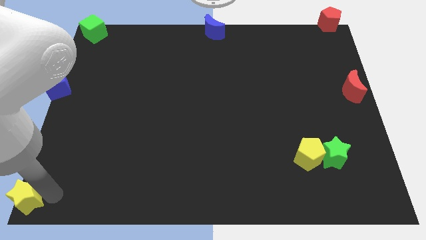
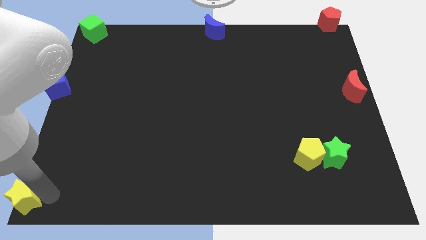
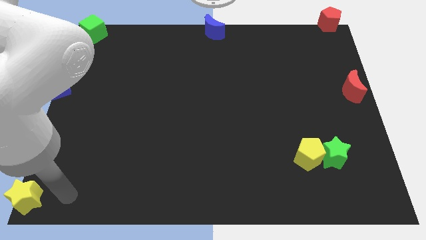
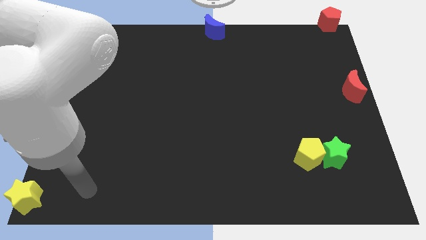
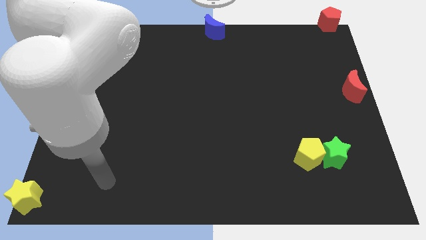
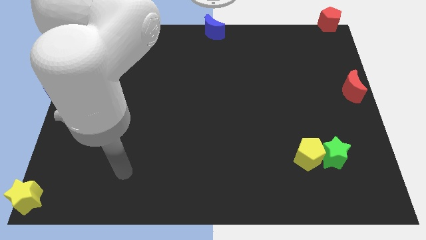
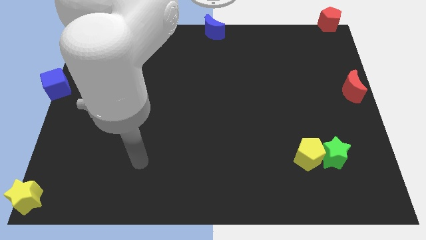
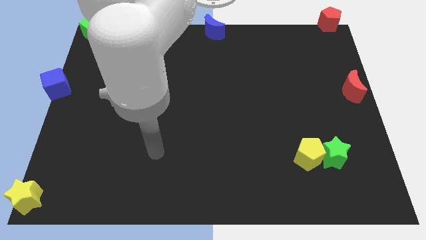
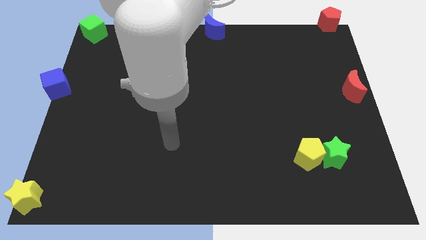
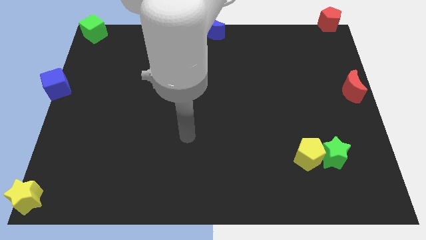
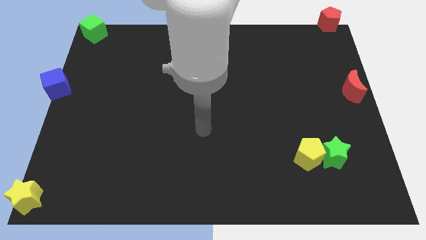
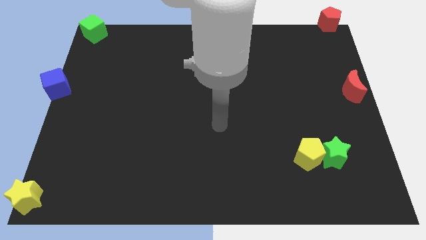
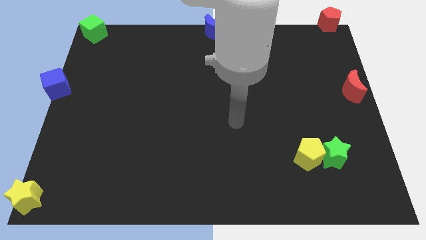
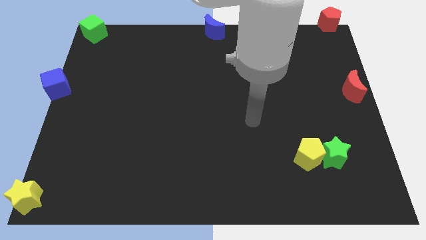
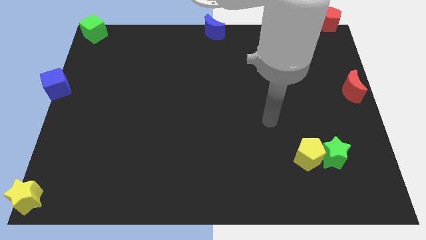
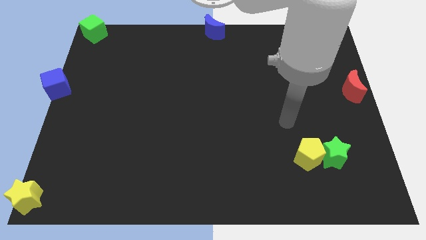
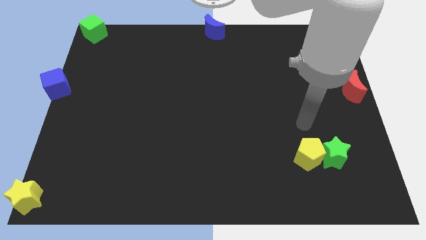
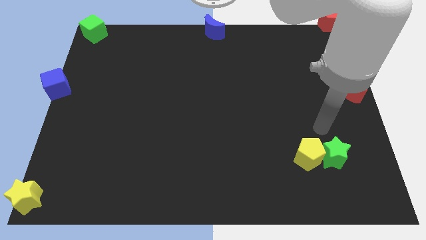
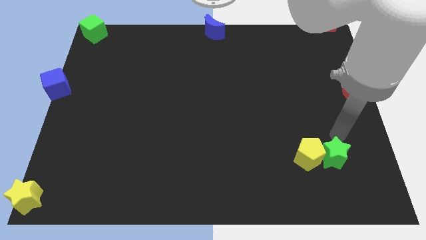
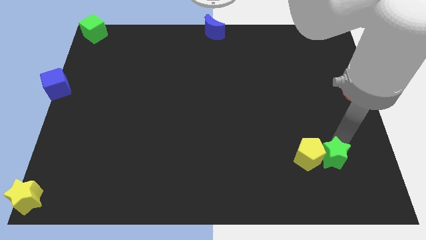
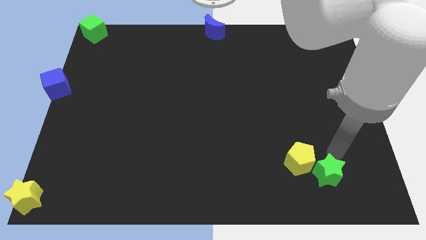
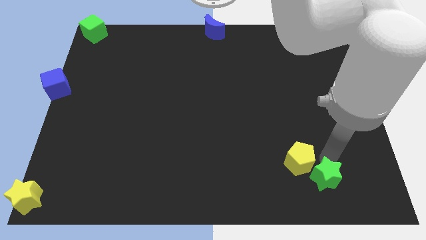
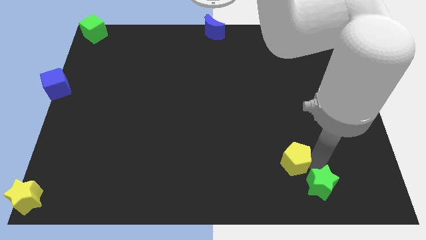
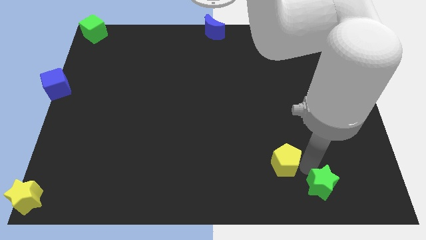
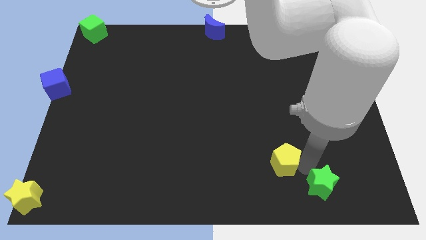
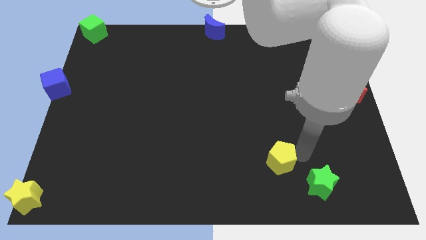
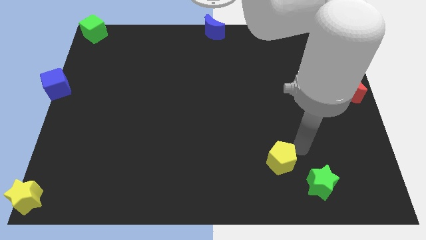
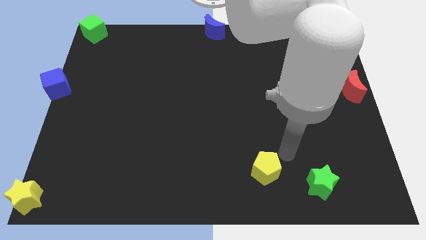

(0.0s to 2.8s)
separate the yellow pentagon and green star from each other

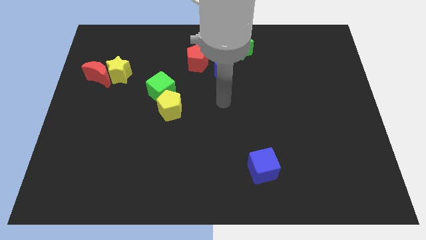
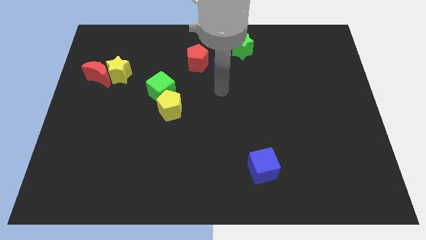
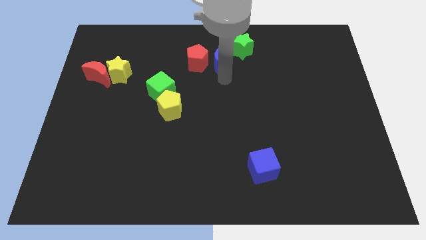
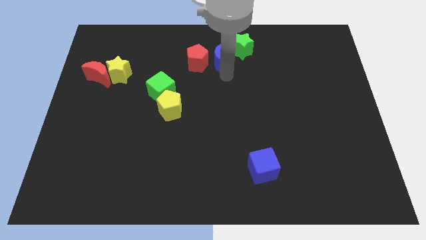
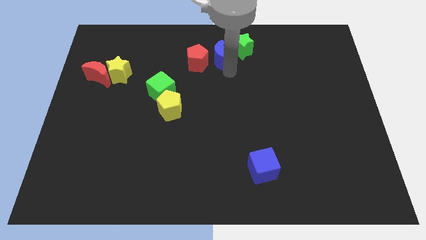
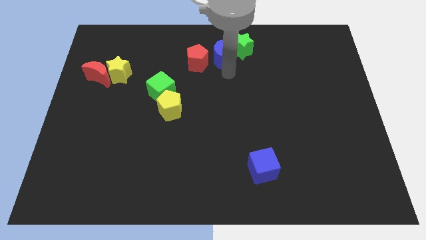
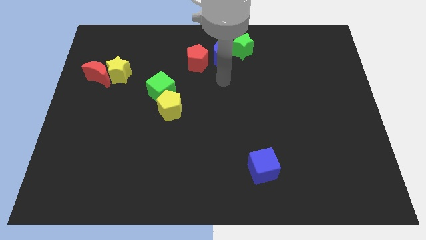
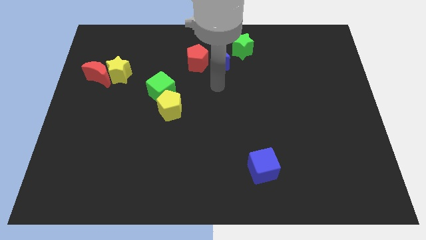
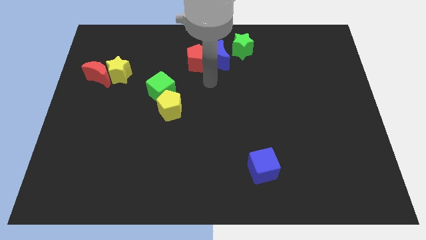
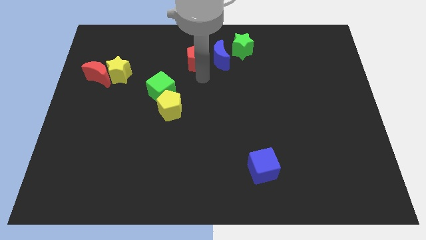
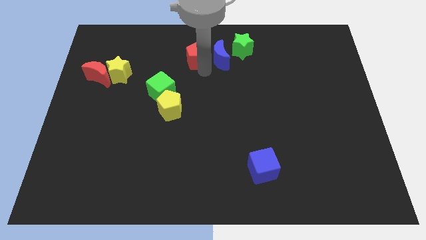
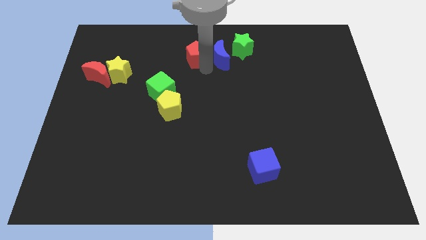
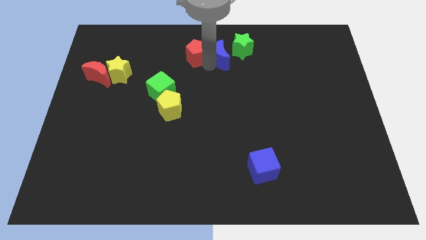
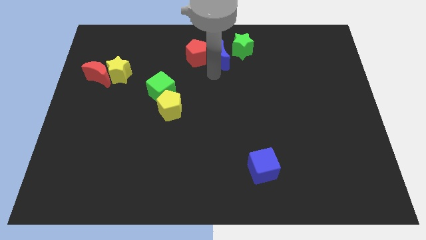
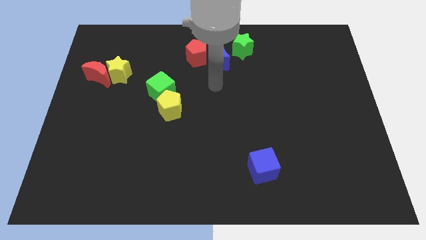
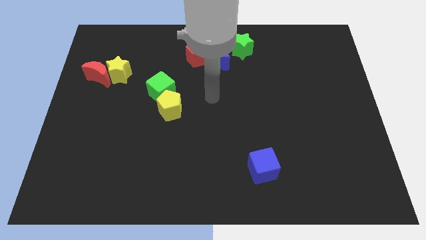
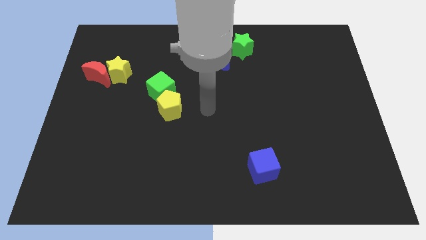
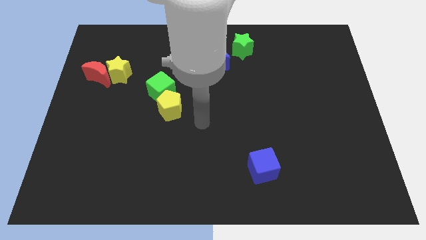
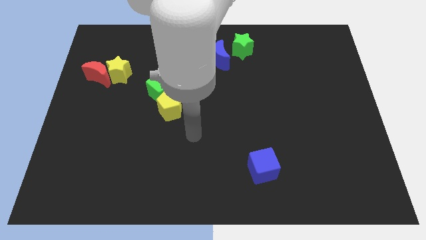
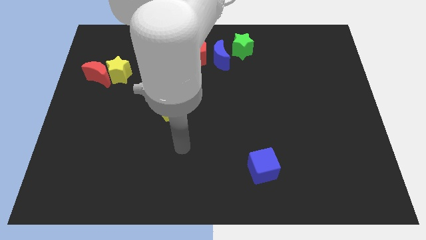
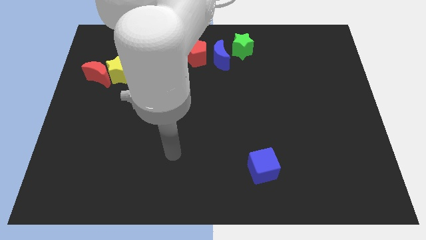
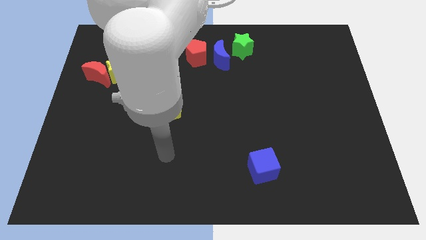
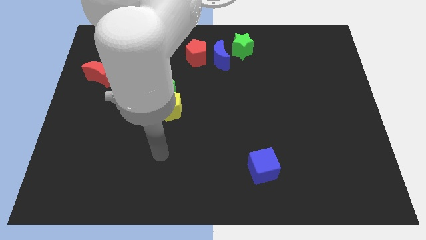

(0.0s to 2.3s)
place the blue moon between red pentagon and green star

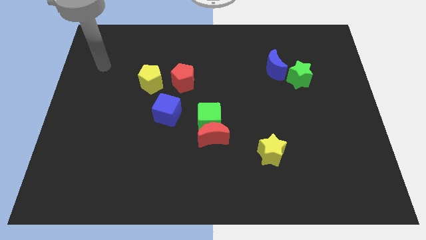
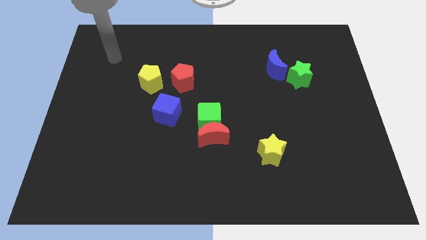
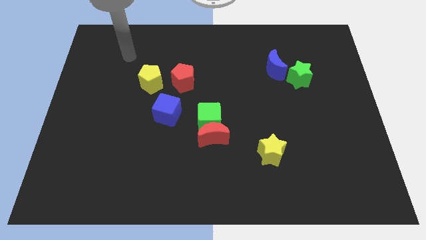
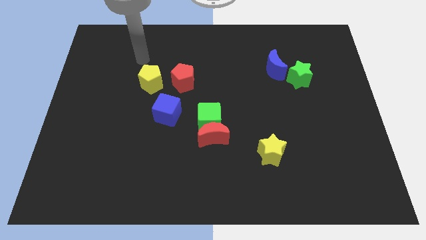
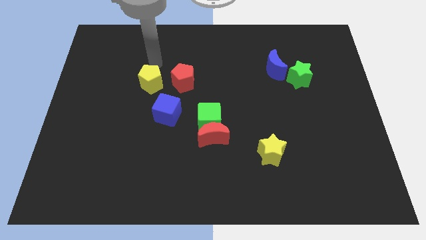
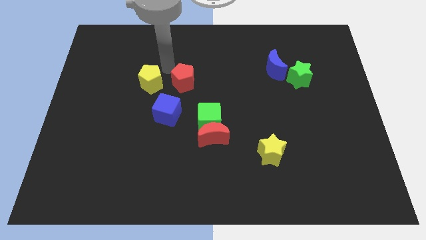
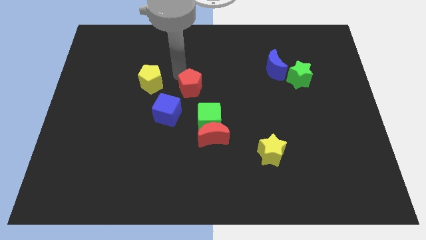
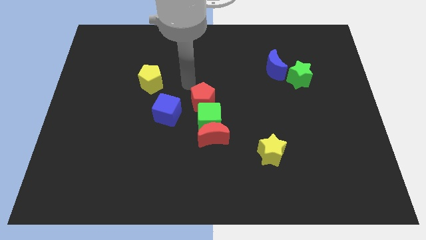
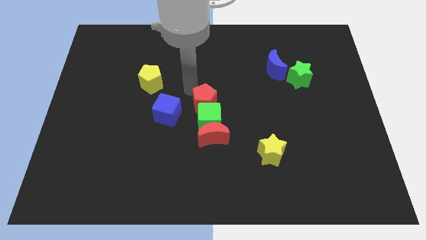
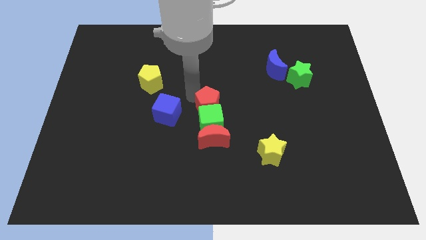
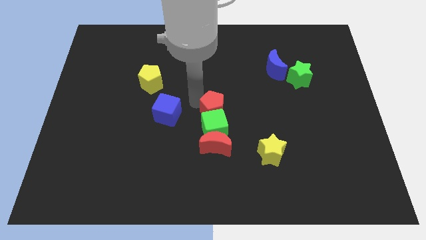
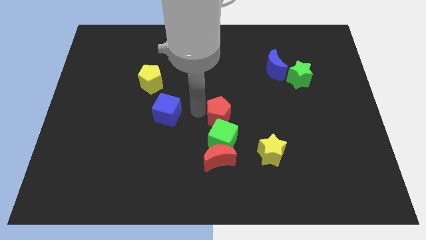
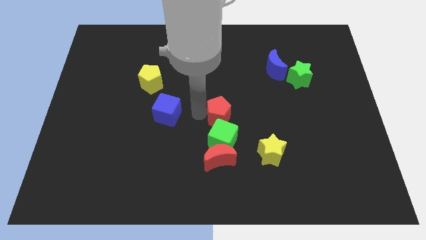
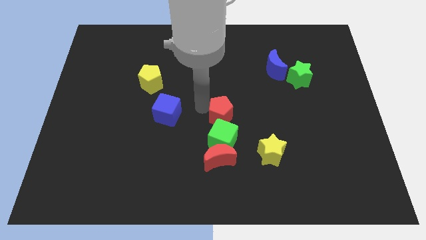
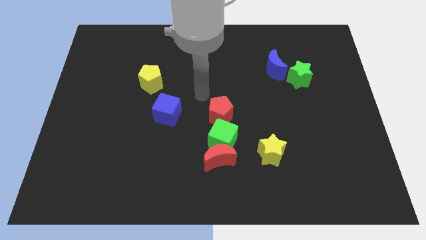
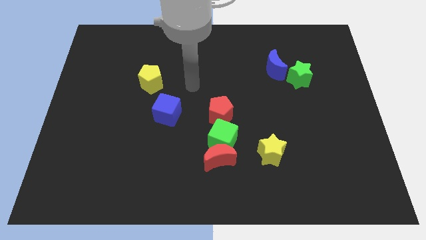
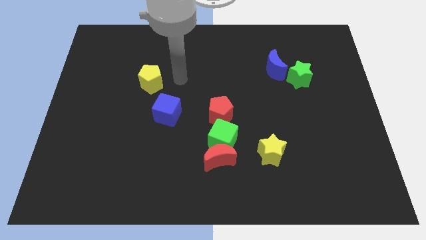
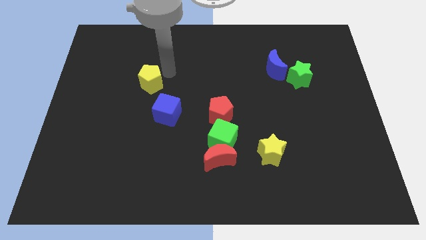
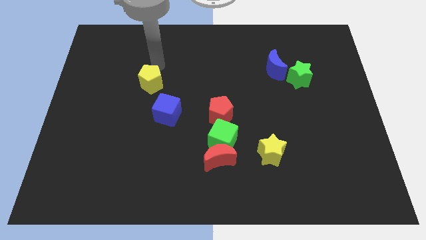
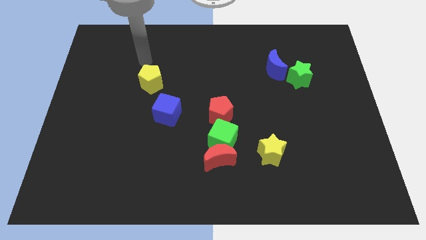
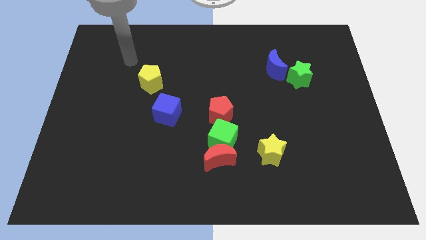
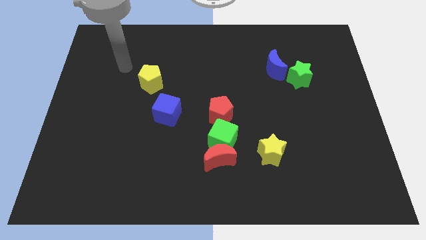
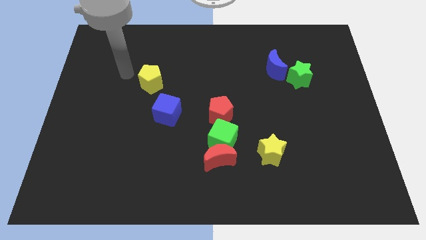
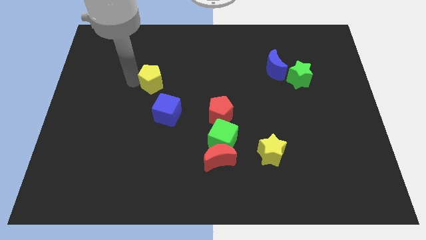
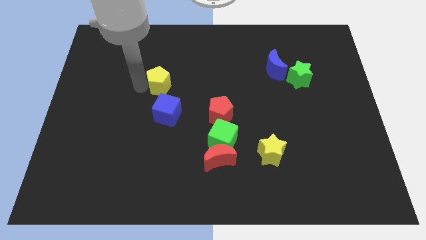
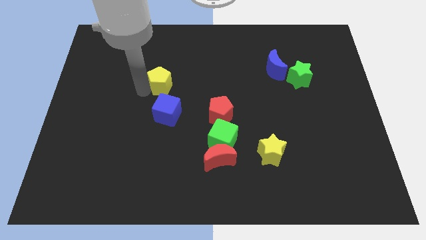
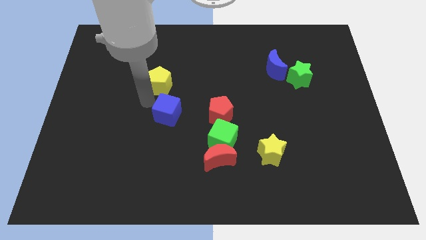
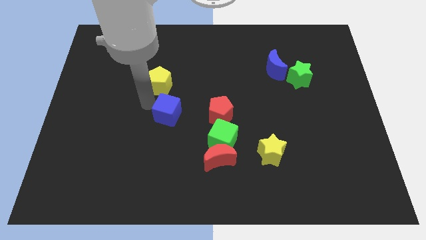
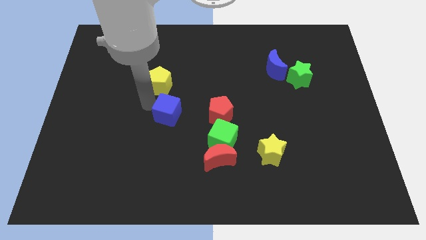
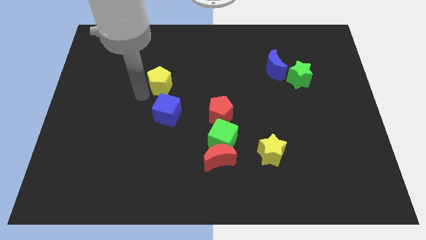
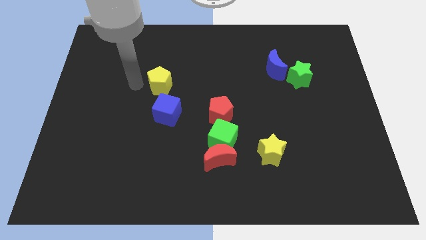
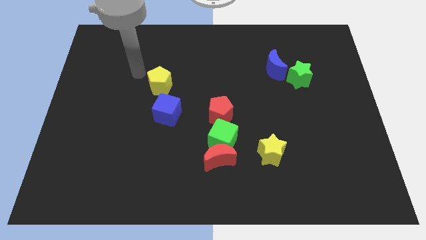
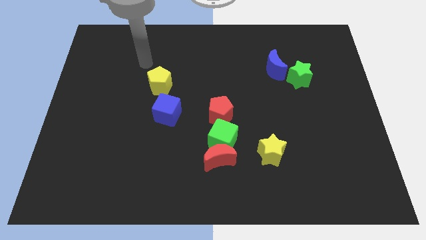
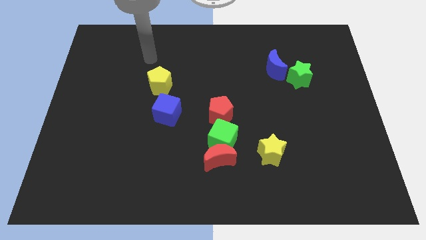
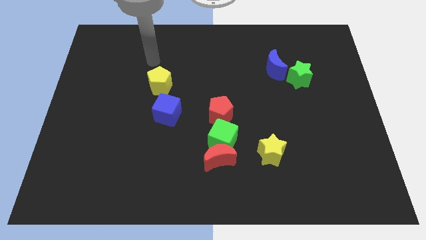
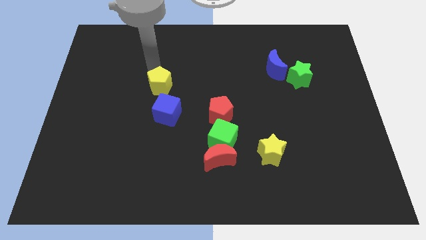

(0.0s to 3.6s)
push red pentagon into the green cube and red moon

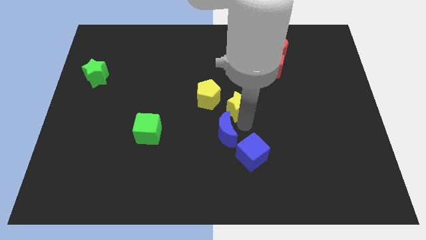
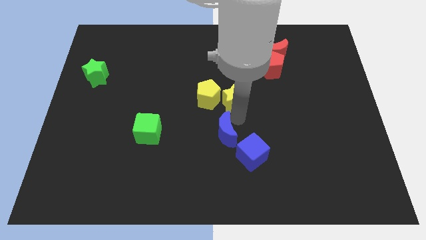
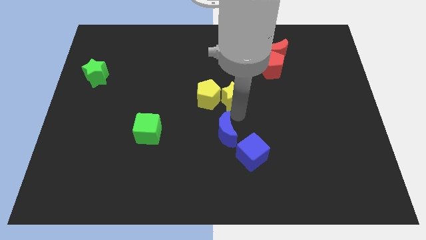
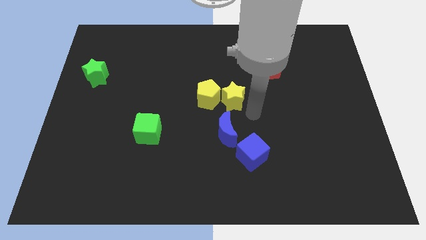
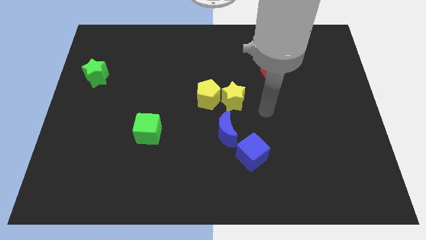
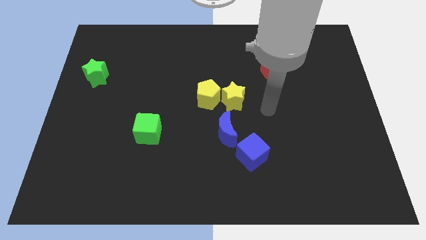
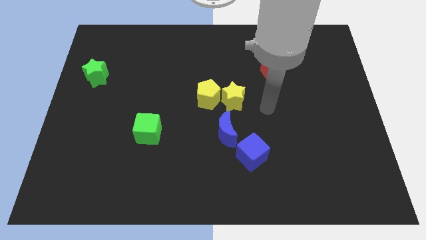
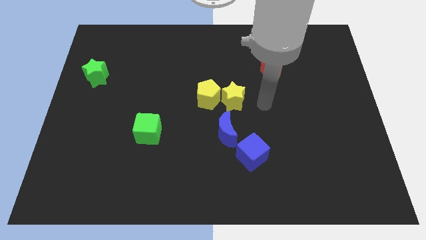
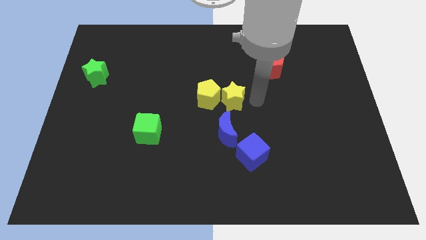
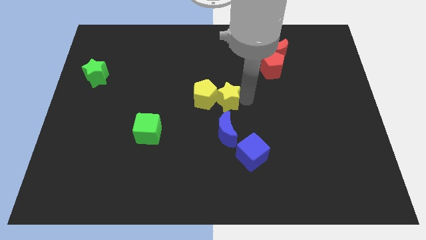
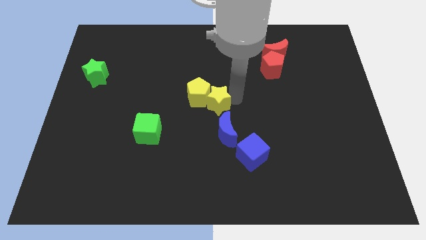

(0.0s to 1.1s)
push yellow star into yellow pentagon
